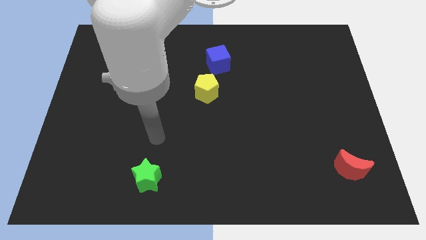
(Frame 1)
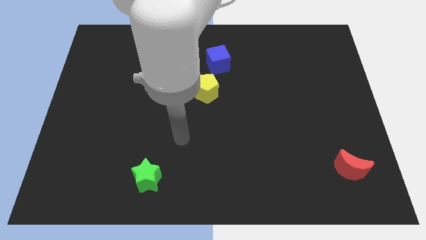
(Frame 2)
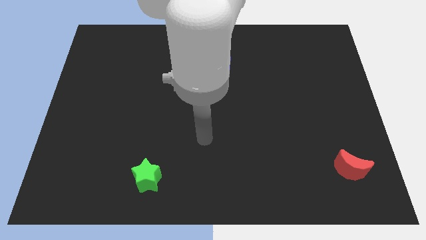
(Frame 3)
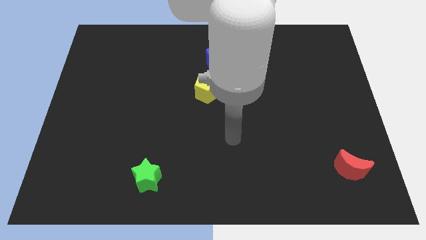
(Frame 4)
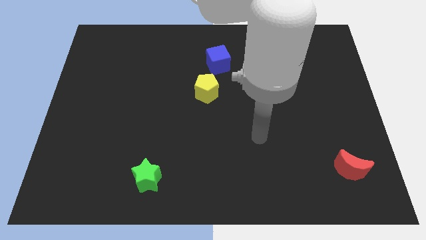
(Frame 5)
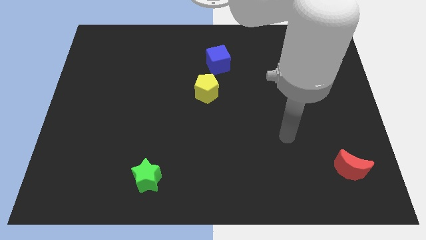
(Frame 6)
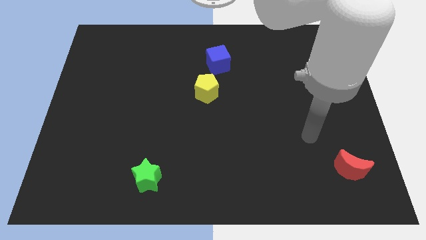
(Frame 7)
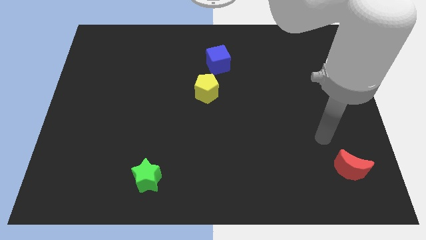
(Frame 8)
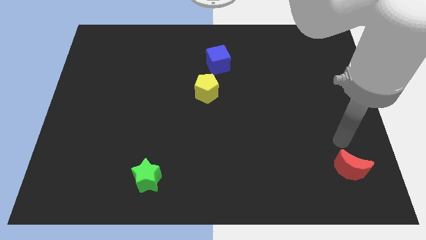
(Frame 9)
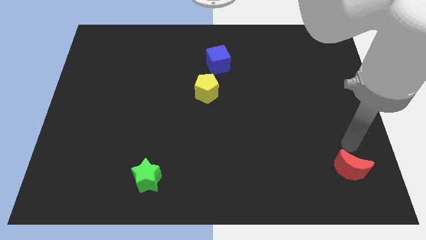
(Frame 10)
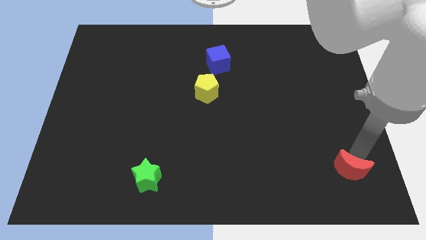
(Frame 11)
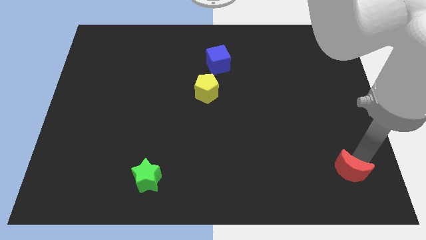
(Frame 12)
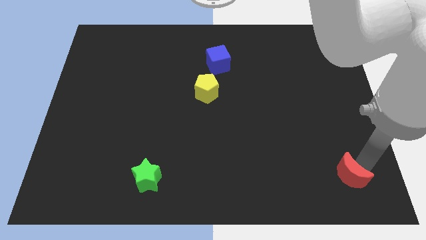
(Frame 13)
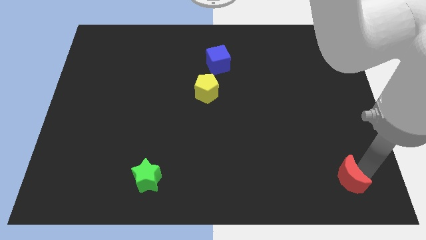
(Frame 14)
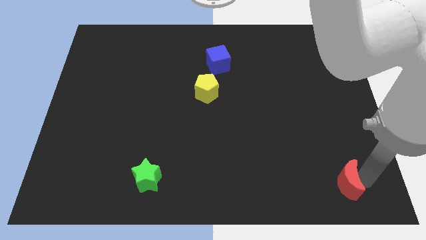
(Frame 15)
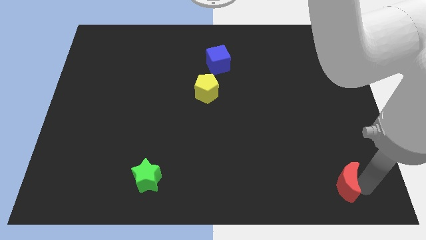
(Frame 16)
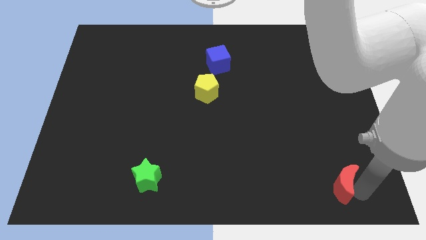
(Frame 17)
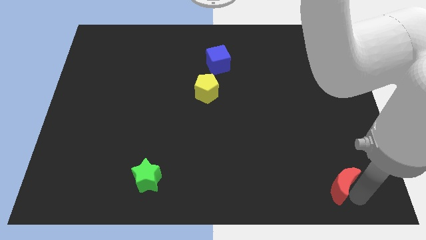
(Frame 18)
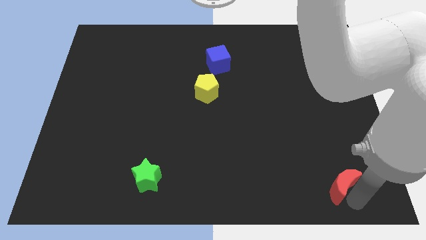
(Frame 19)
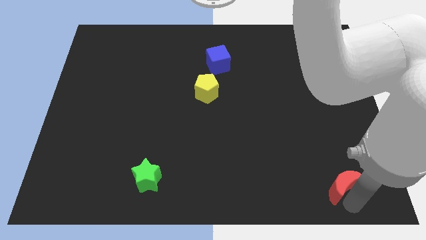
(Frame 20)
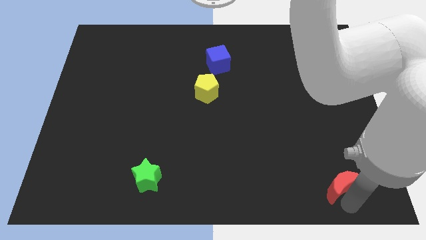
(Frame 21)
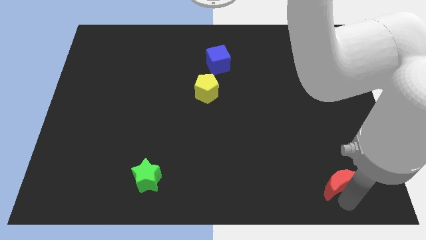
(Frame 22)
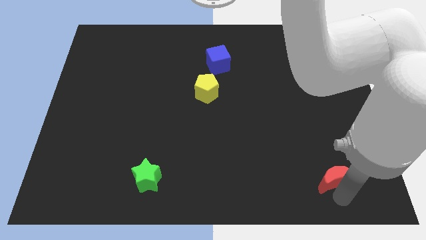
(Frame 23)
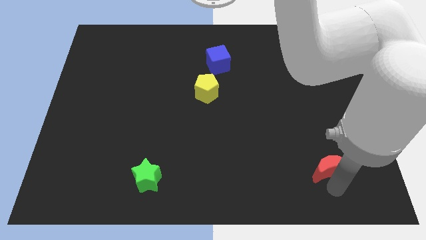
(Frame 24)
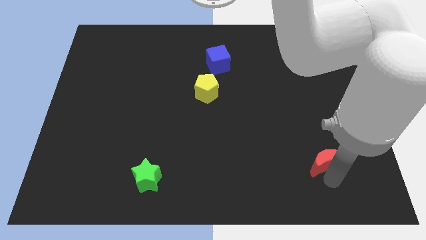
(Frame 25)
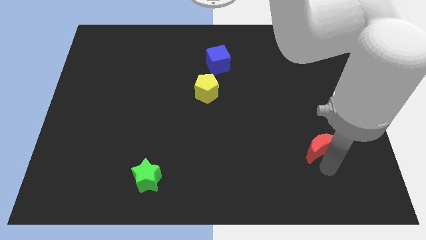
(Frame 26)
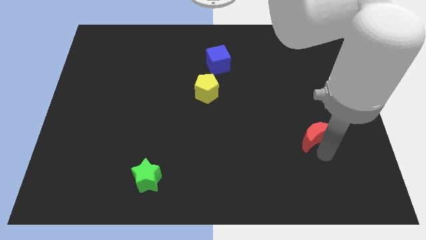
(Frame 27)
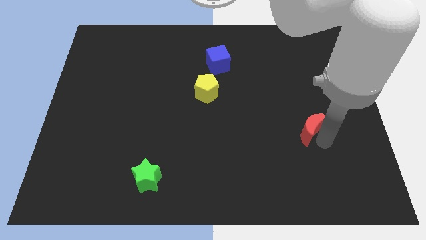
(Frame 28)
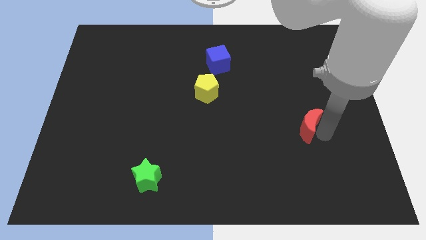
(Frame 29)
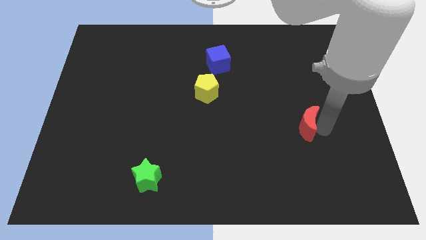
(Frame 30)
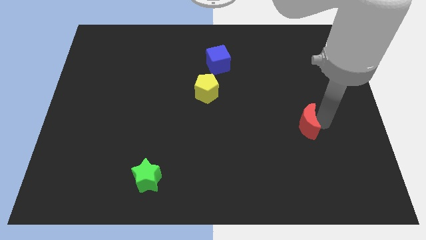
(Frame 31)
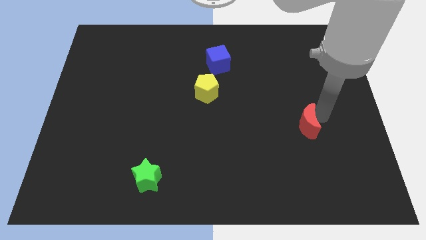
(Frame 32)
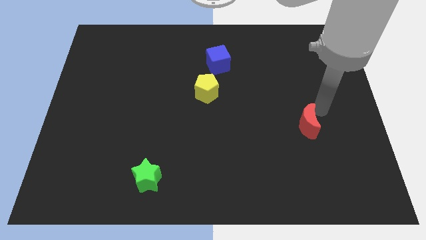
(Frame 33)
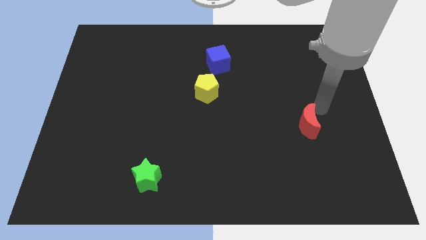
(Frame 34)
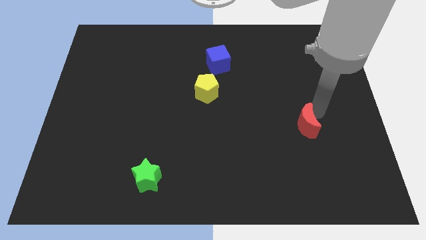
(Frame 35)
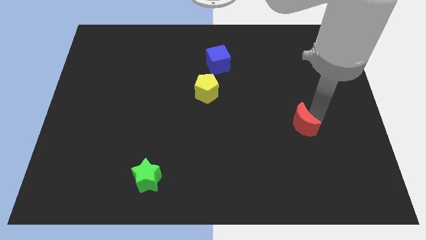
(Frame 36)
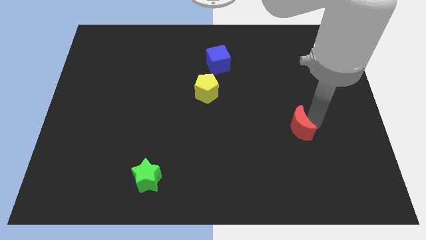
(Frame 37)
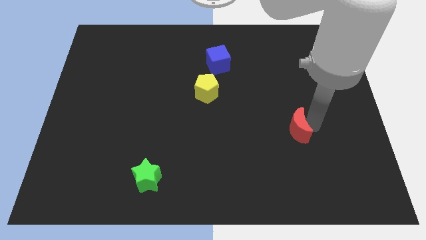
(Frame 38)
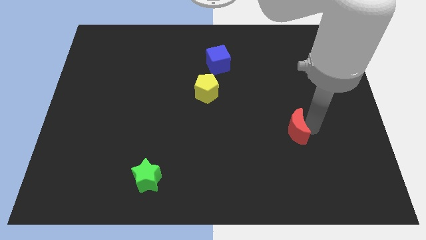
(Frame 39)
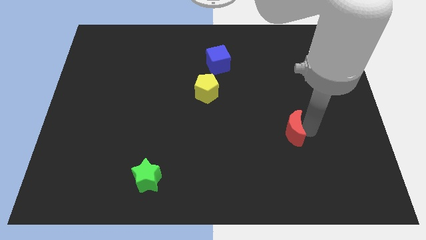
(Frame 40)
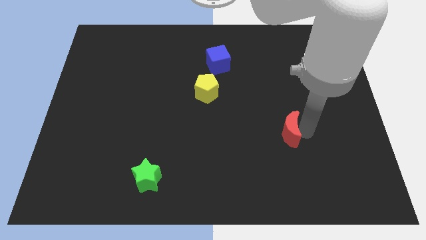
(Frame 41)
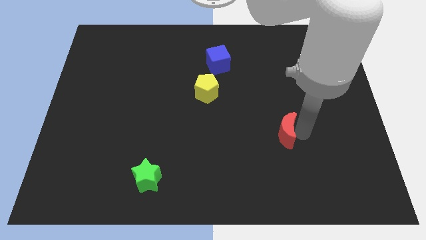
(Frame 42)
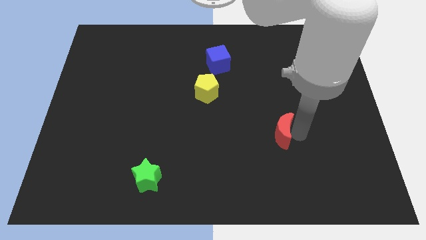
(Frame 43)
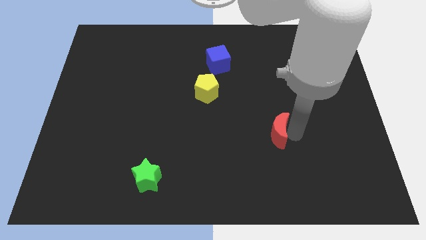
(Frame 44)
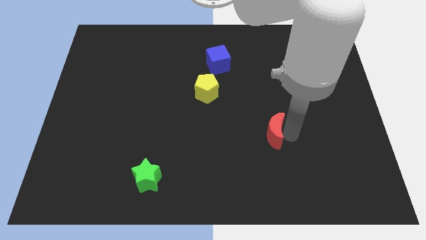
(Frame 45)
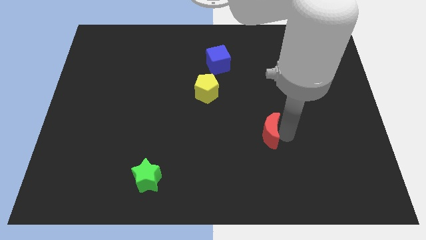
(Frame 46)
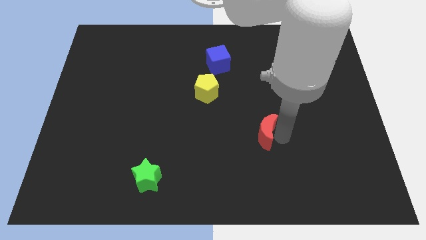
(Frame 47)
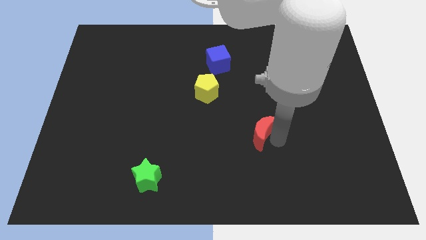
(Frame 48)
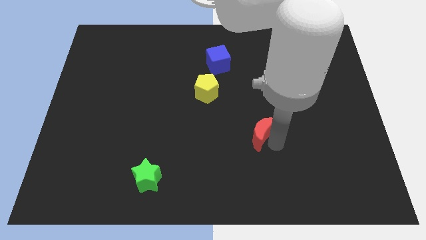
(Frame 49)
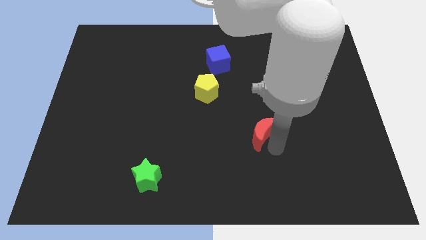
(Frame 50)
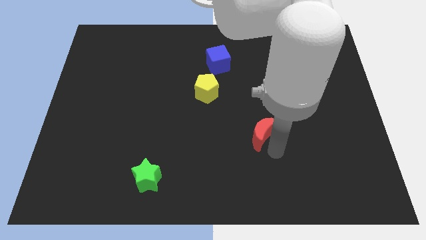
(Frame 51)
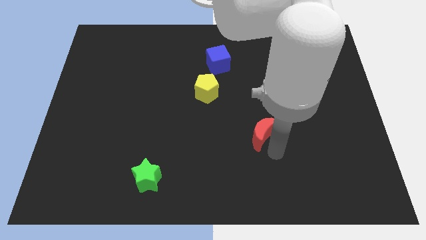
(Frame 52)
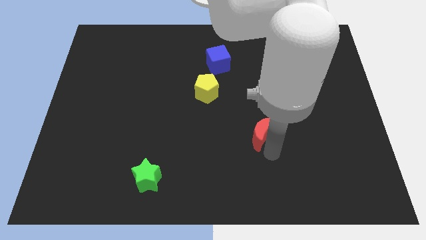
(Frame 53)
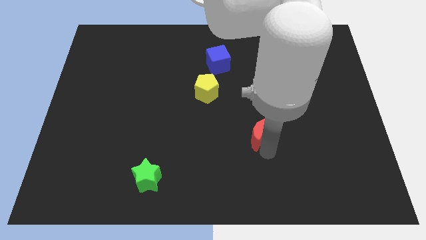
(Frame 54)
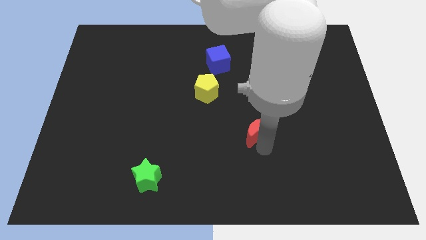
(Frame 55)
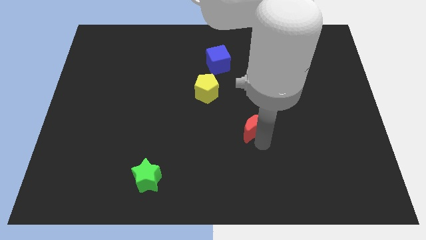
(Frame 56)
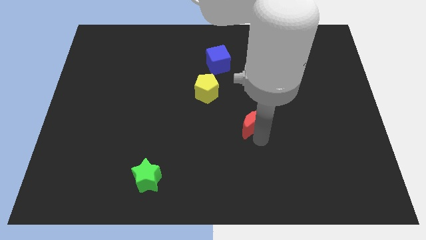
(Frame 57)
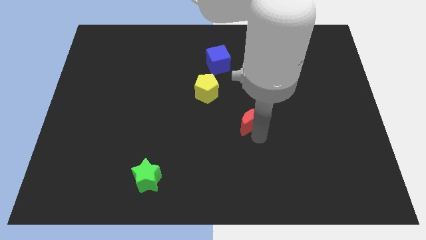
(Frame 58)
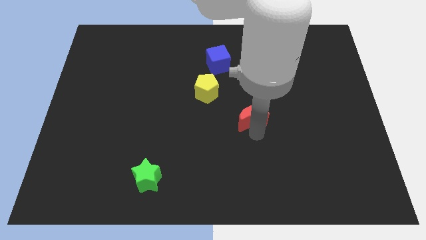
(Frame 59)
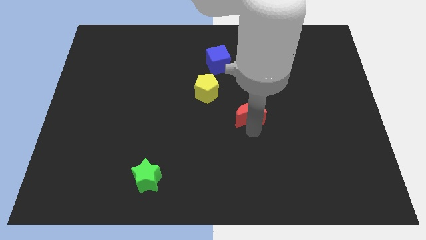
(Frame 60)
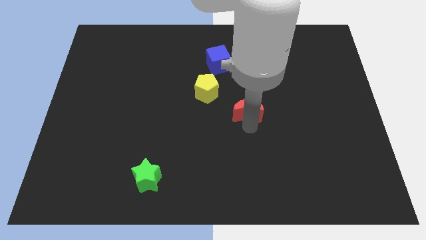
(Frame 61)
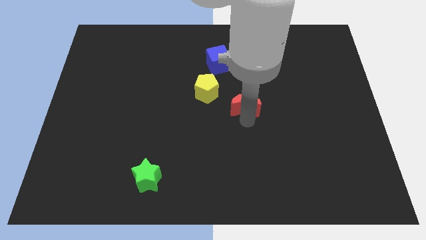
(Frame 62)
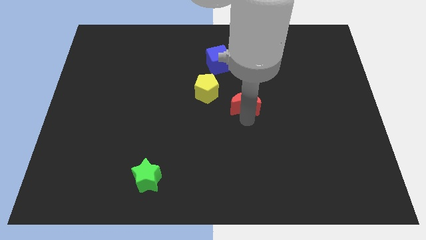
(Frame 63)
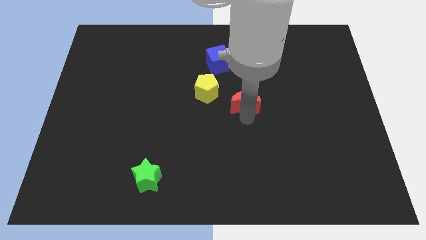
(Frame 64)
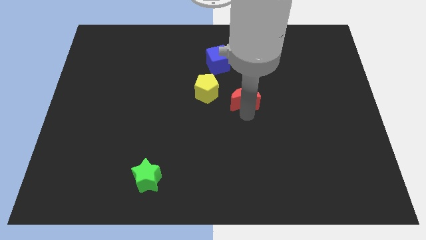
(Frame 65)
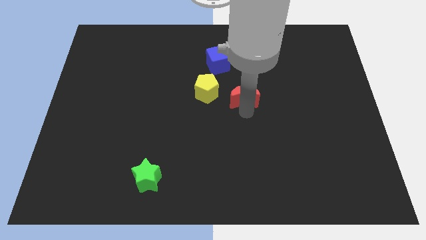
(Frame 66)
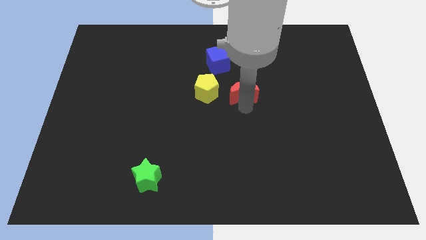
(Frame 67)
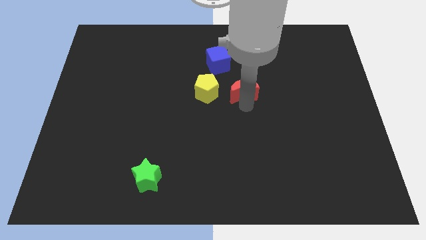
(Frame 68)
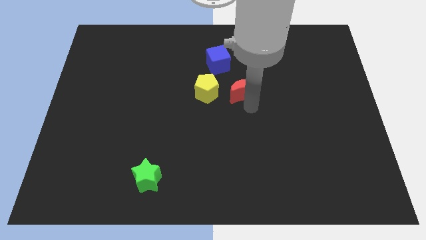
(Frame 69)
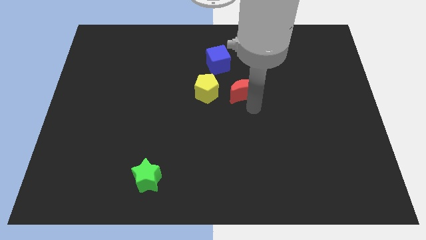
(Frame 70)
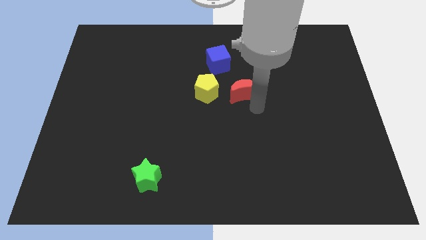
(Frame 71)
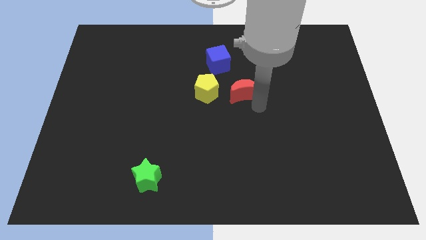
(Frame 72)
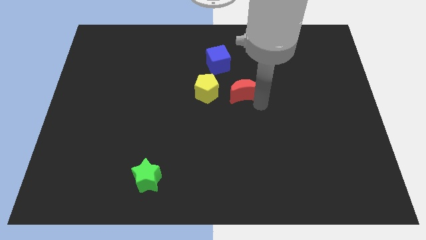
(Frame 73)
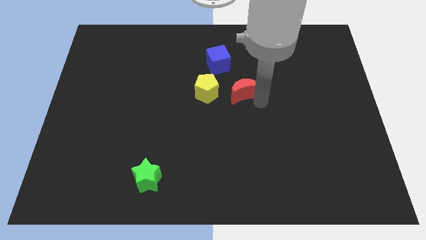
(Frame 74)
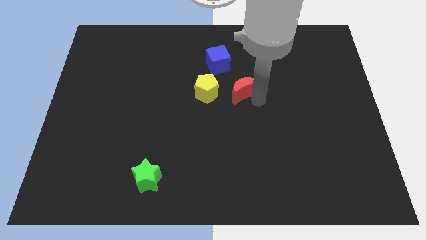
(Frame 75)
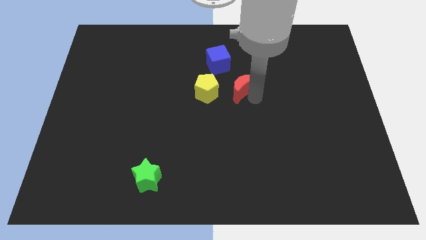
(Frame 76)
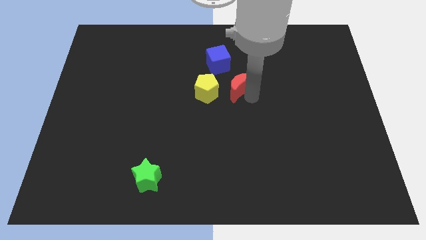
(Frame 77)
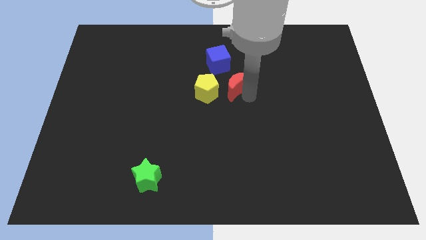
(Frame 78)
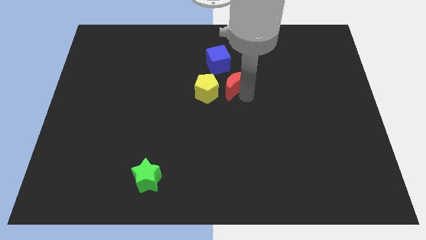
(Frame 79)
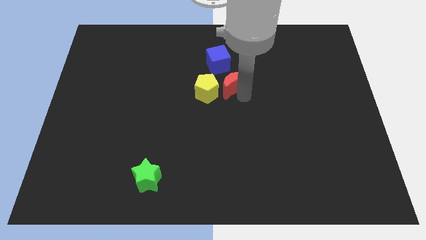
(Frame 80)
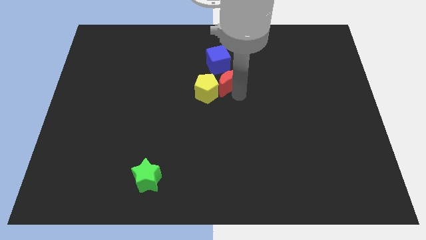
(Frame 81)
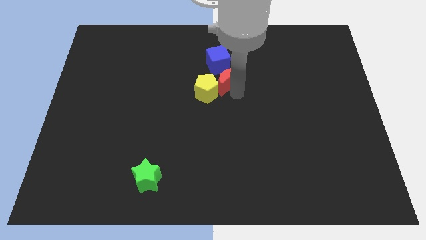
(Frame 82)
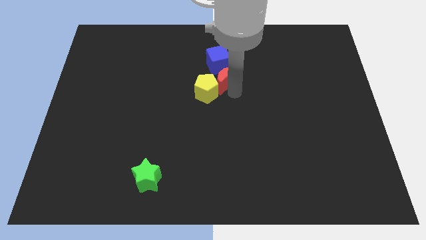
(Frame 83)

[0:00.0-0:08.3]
put the red moon close to the pentagon

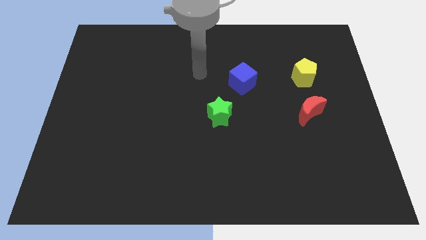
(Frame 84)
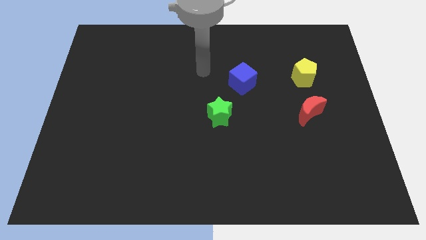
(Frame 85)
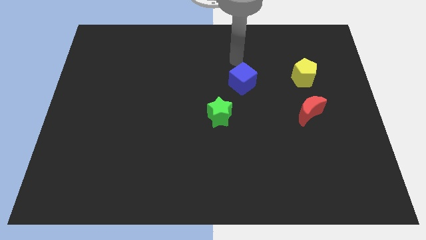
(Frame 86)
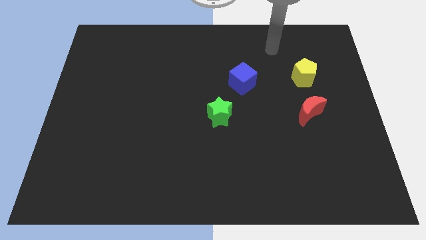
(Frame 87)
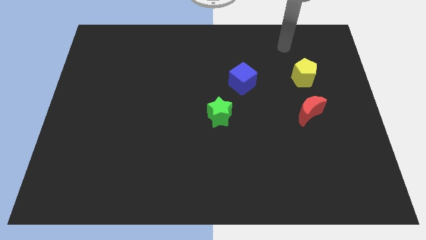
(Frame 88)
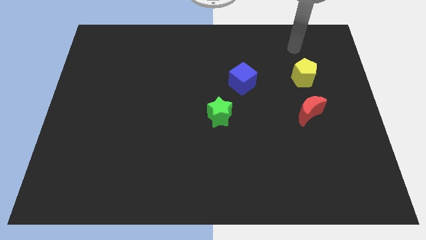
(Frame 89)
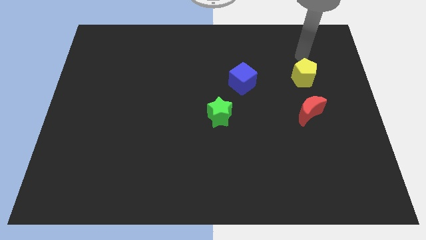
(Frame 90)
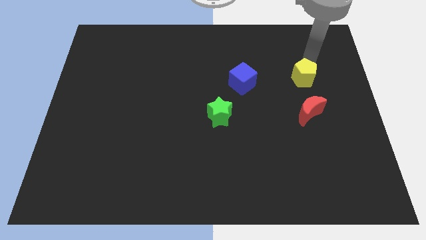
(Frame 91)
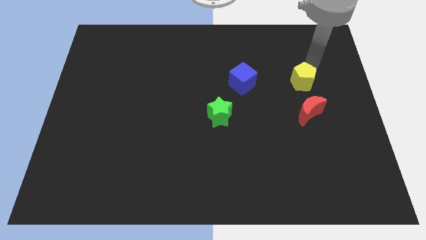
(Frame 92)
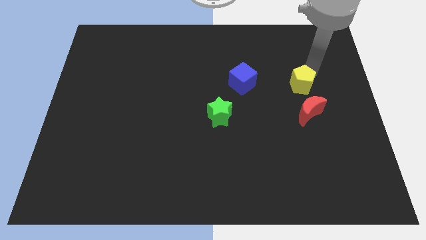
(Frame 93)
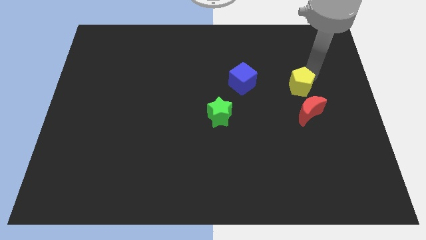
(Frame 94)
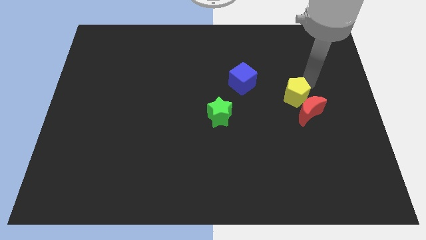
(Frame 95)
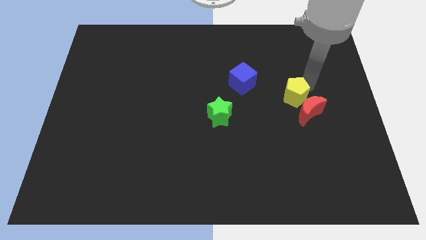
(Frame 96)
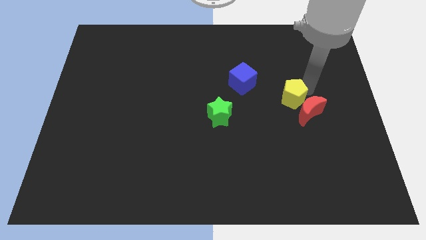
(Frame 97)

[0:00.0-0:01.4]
push the yellow block close to the red block
